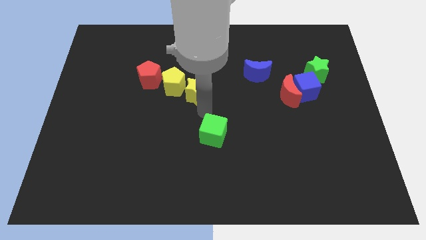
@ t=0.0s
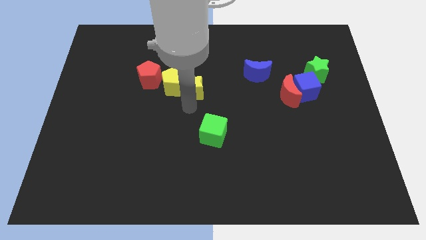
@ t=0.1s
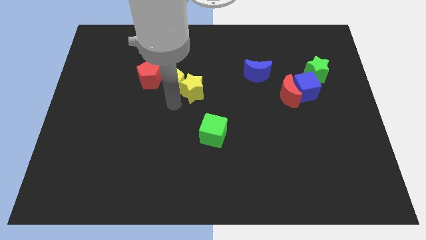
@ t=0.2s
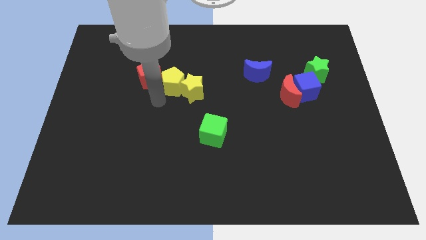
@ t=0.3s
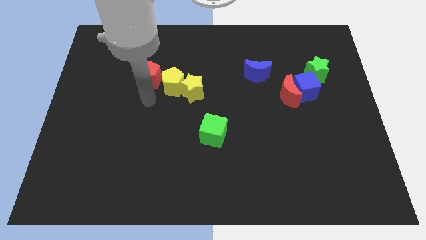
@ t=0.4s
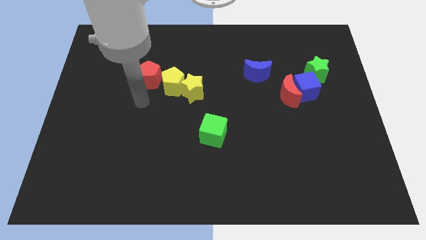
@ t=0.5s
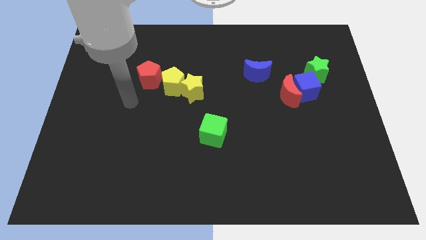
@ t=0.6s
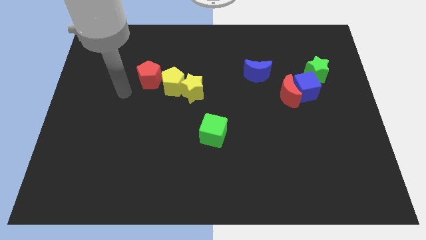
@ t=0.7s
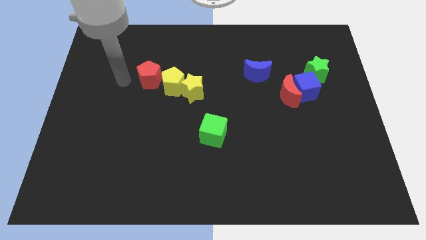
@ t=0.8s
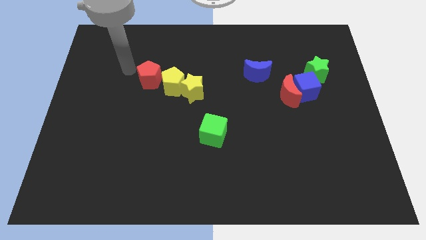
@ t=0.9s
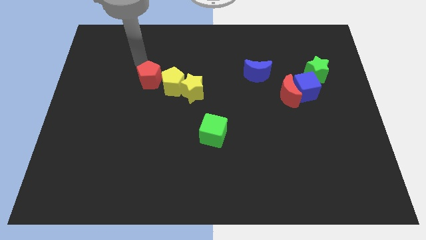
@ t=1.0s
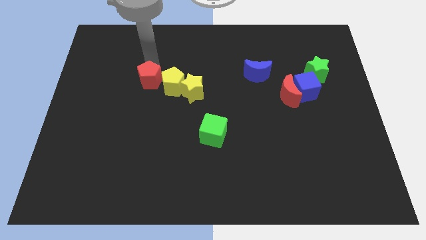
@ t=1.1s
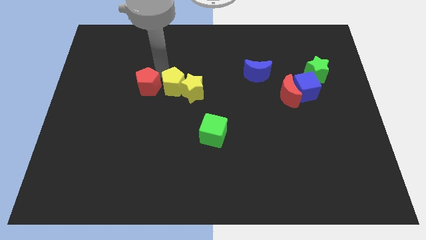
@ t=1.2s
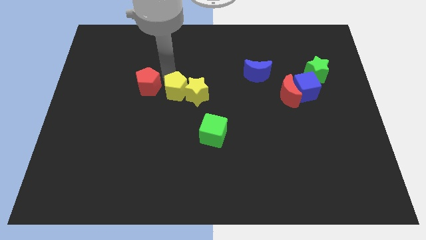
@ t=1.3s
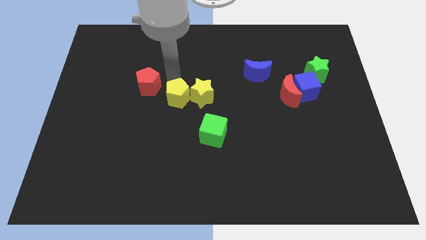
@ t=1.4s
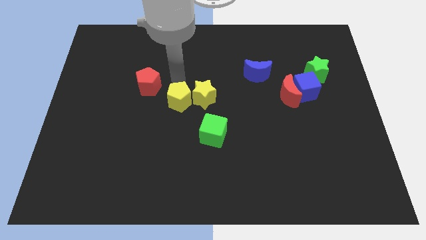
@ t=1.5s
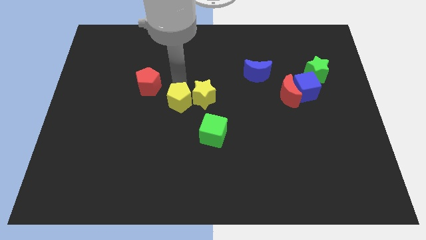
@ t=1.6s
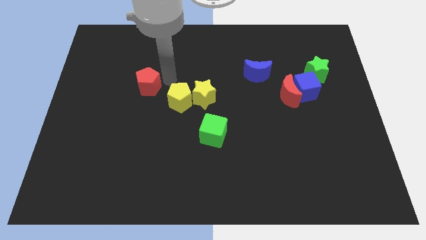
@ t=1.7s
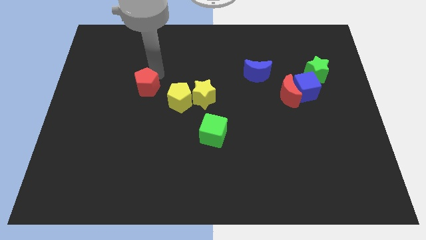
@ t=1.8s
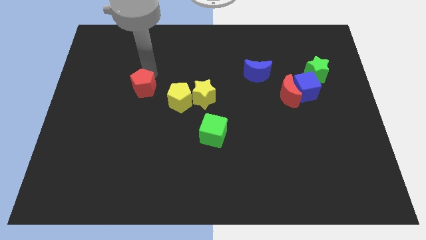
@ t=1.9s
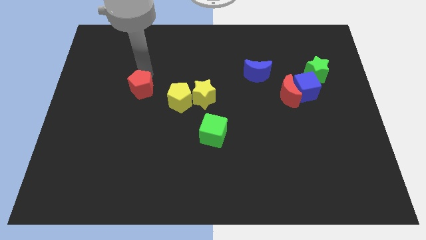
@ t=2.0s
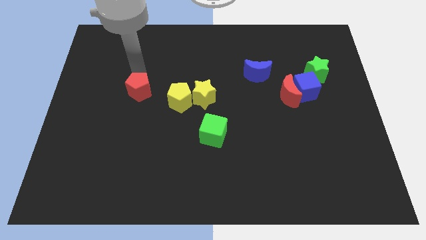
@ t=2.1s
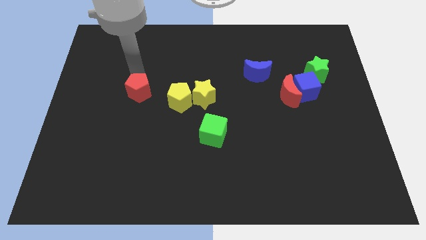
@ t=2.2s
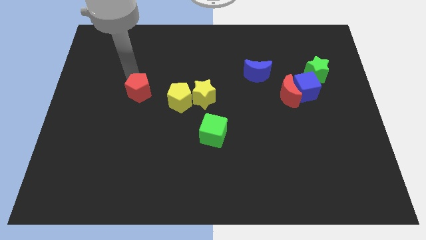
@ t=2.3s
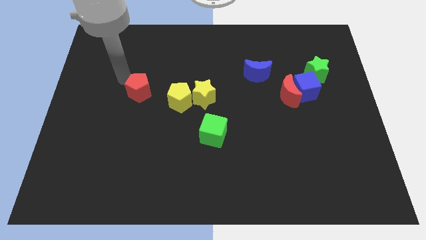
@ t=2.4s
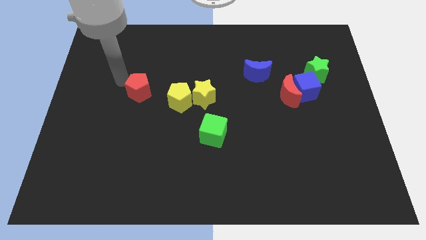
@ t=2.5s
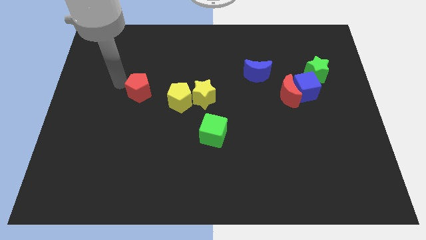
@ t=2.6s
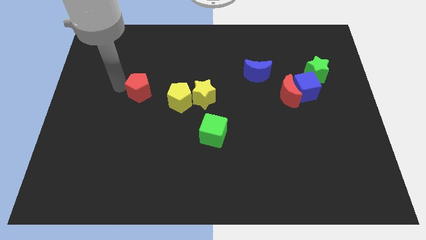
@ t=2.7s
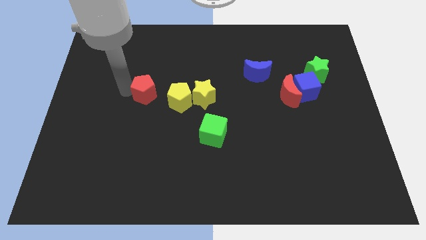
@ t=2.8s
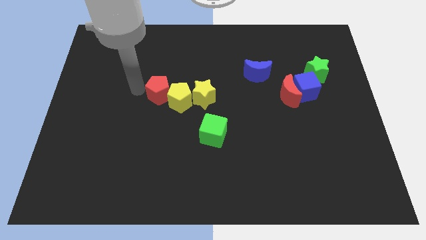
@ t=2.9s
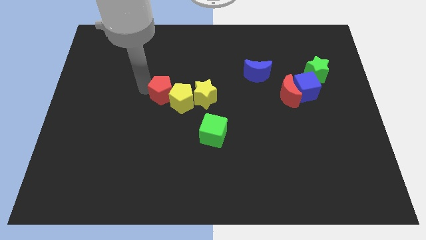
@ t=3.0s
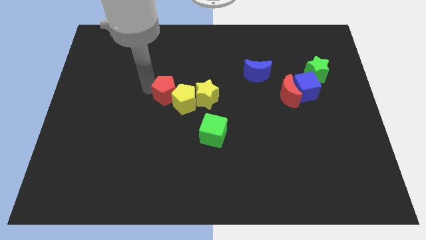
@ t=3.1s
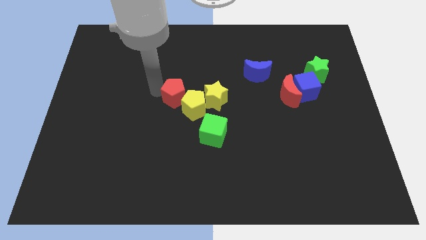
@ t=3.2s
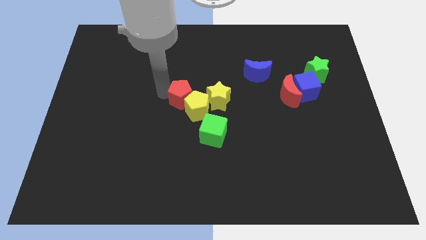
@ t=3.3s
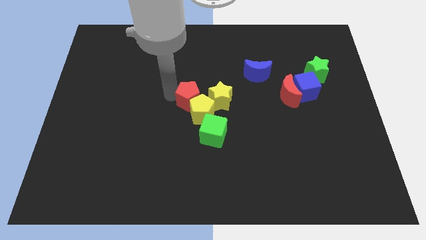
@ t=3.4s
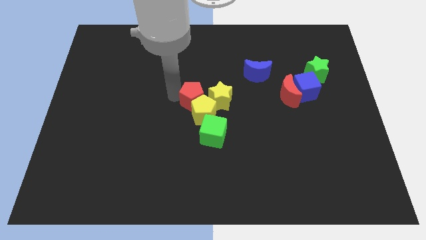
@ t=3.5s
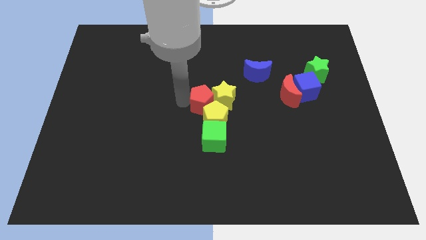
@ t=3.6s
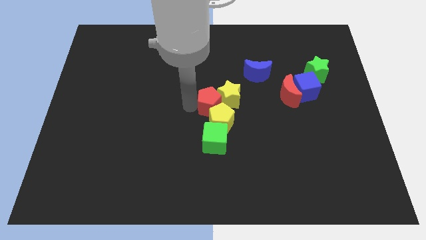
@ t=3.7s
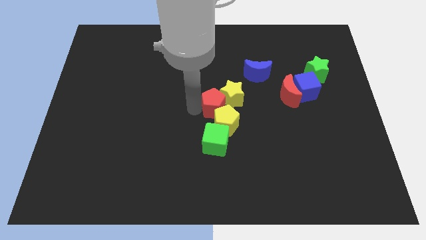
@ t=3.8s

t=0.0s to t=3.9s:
push the red pentagon into the yellow pentagon and yellow star

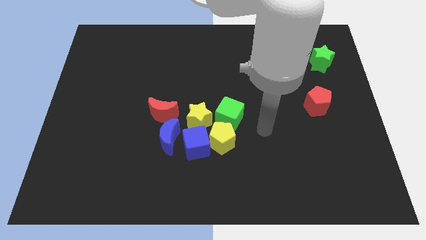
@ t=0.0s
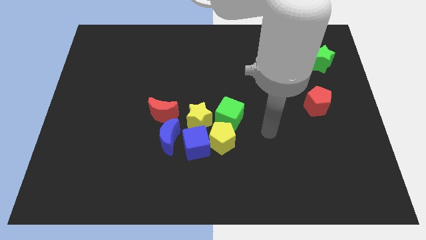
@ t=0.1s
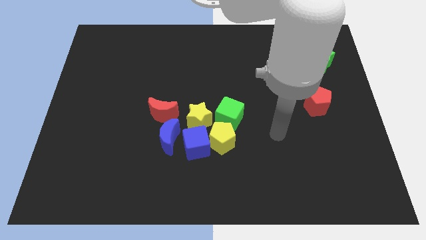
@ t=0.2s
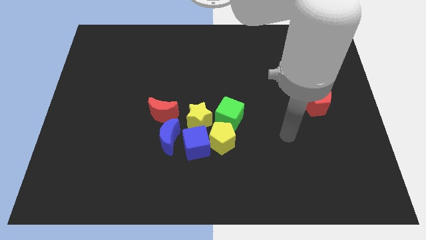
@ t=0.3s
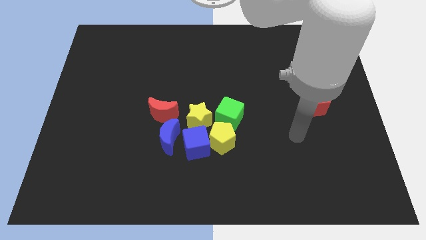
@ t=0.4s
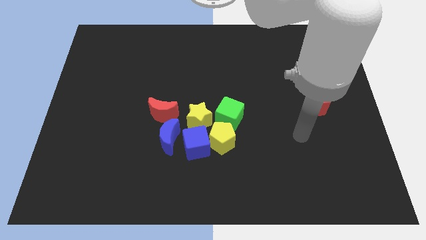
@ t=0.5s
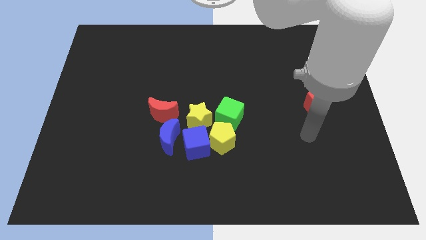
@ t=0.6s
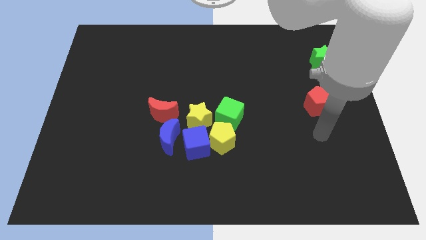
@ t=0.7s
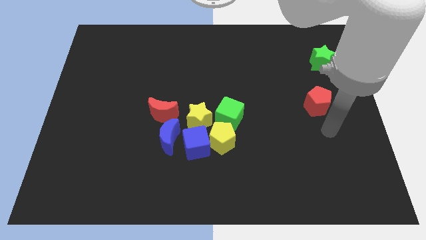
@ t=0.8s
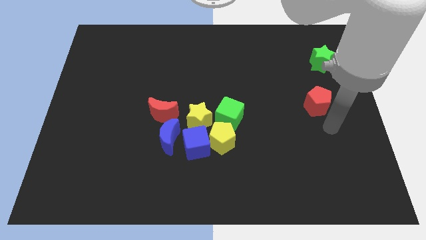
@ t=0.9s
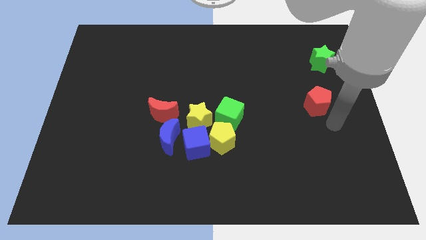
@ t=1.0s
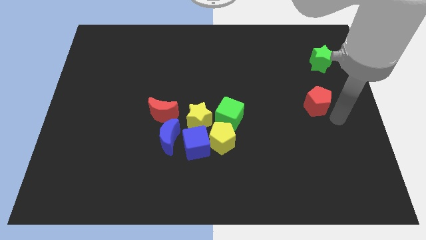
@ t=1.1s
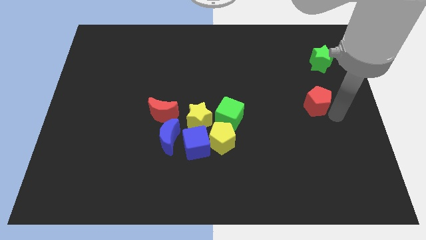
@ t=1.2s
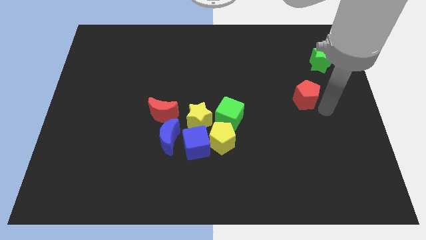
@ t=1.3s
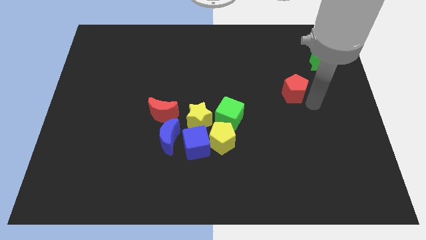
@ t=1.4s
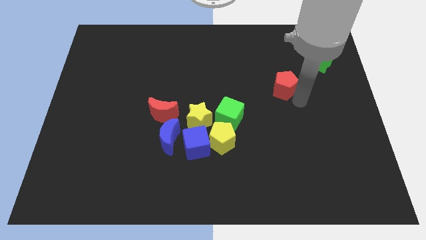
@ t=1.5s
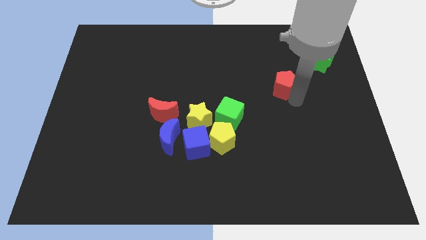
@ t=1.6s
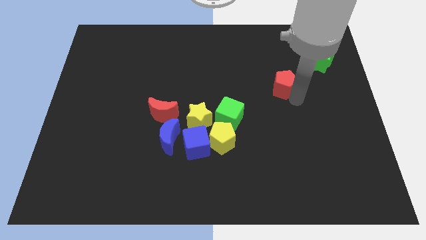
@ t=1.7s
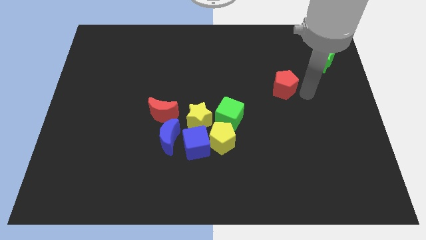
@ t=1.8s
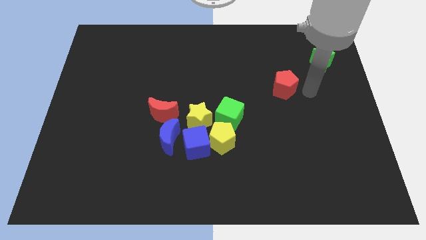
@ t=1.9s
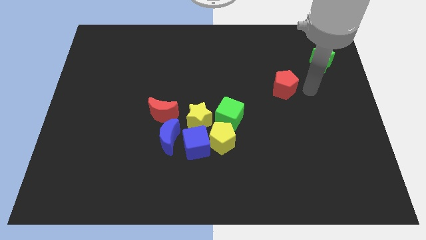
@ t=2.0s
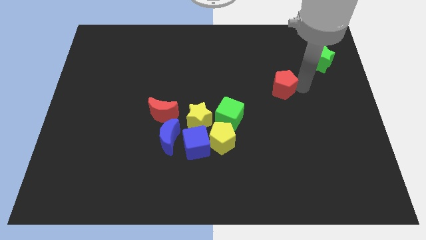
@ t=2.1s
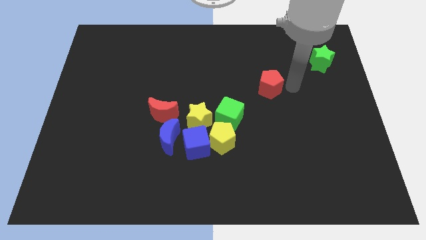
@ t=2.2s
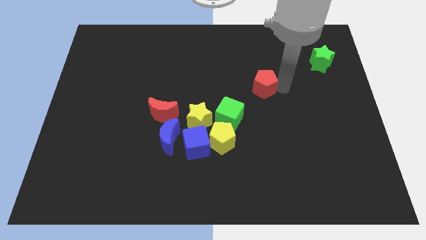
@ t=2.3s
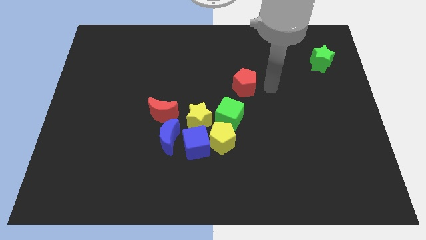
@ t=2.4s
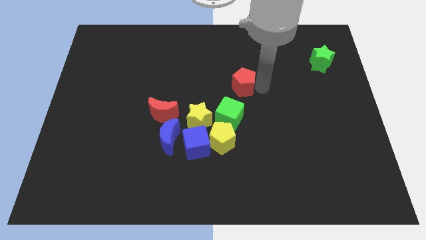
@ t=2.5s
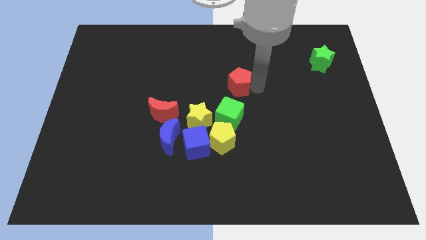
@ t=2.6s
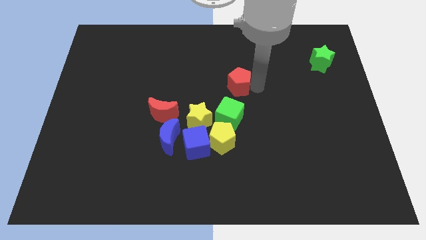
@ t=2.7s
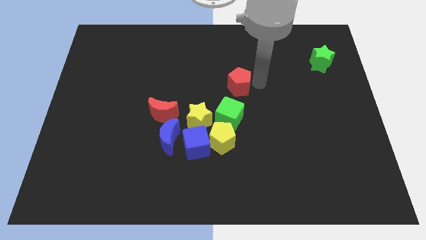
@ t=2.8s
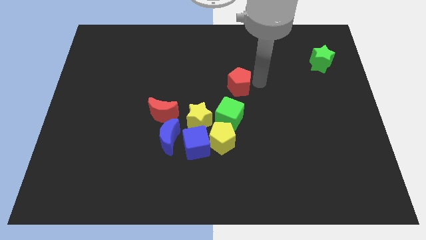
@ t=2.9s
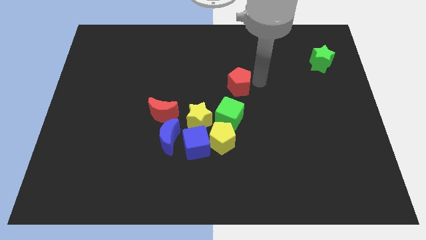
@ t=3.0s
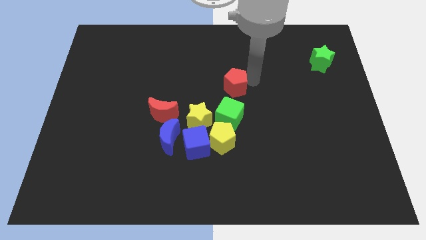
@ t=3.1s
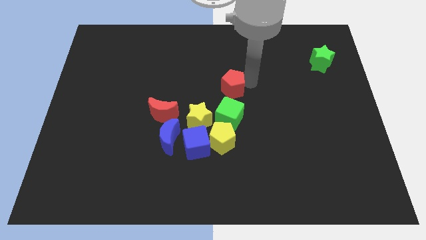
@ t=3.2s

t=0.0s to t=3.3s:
push the red pentagon to the top of the green cube

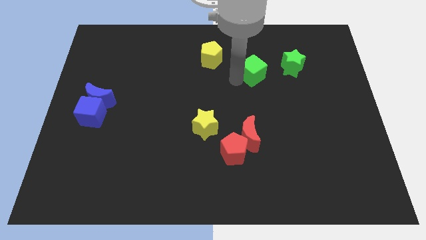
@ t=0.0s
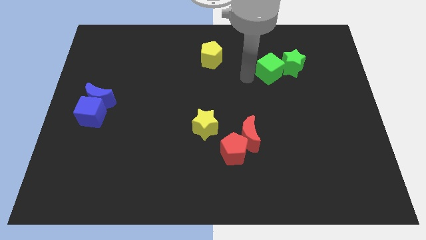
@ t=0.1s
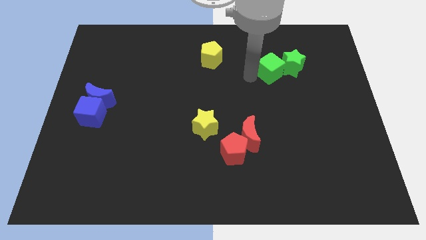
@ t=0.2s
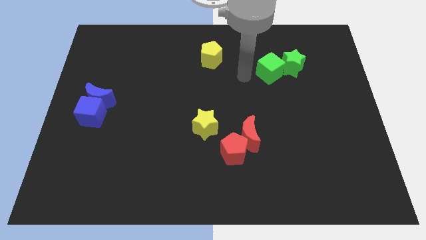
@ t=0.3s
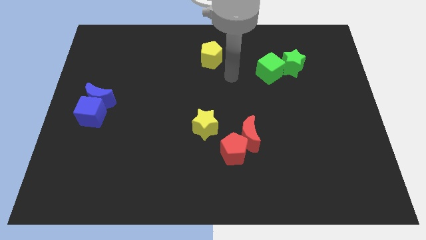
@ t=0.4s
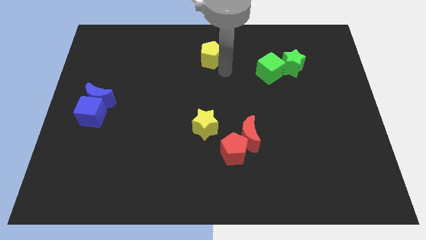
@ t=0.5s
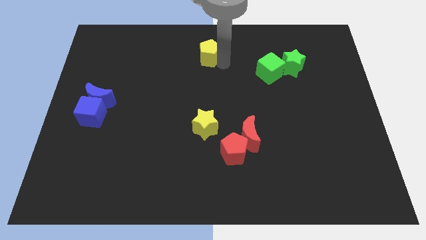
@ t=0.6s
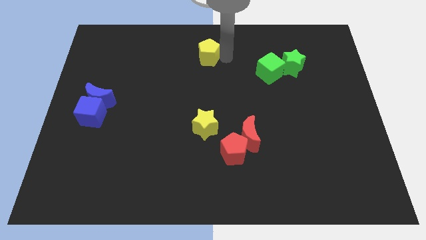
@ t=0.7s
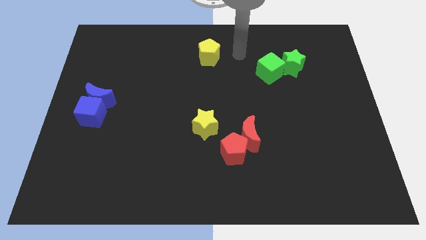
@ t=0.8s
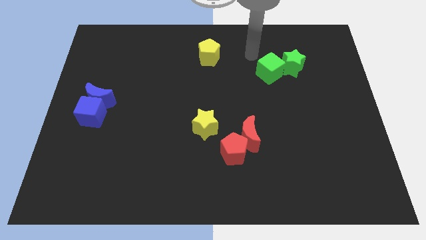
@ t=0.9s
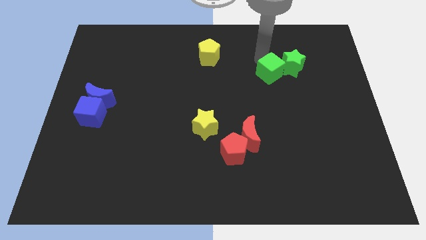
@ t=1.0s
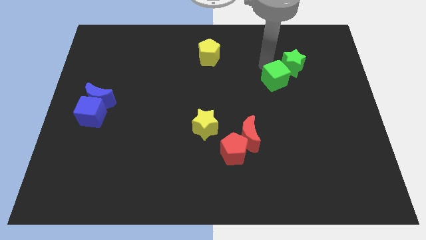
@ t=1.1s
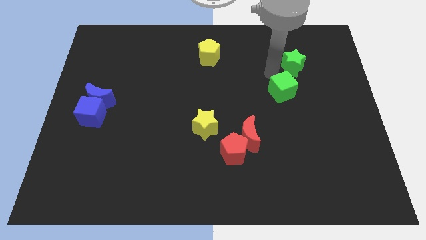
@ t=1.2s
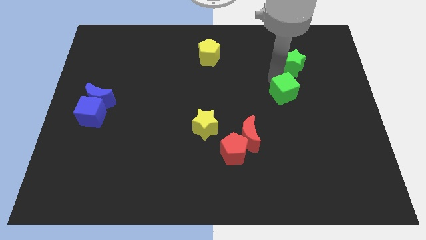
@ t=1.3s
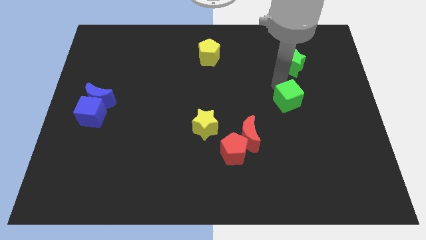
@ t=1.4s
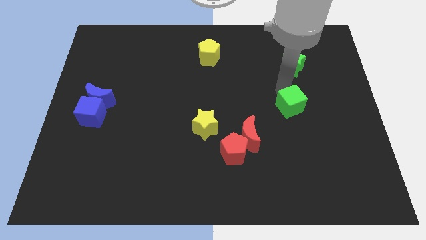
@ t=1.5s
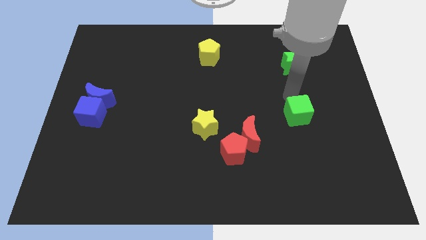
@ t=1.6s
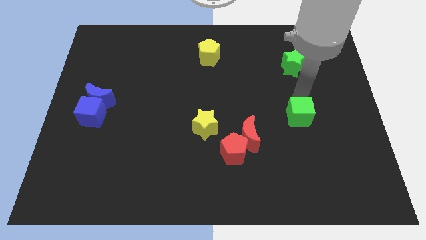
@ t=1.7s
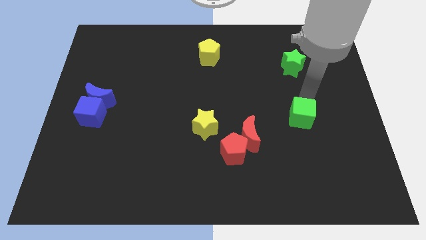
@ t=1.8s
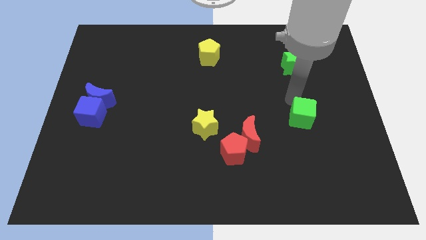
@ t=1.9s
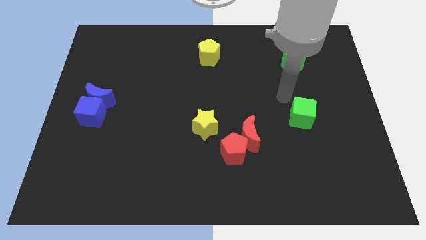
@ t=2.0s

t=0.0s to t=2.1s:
place the green cube vertically below the green star
